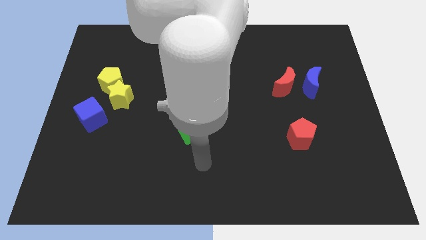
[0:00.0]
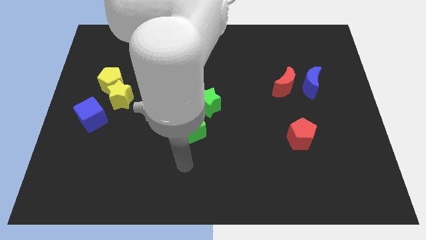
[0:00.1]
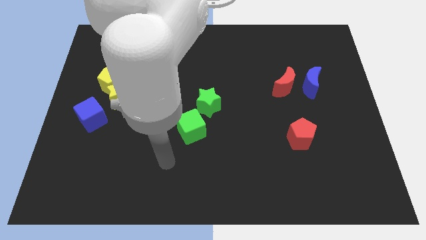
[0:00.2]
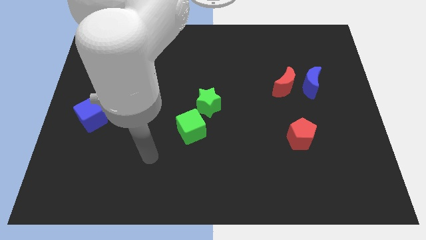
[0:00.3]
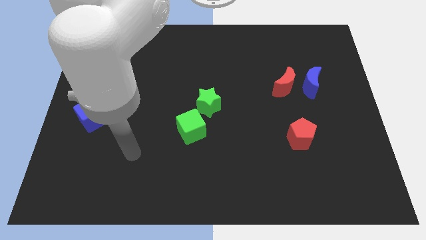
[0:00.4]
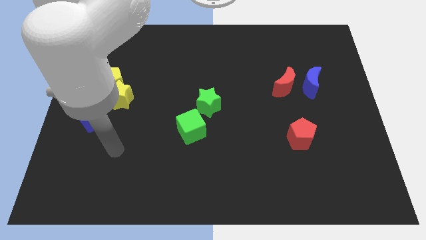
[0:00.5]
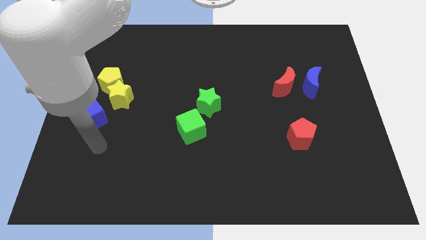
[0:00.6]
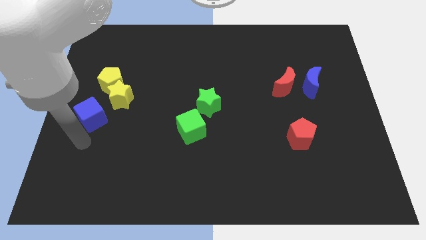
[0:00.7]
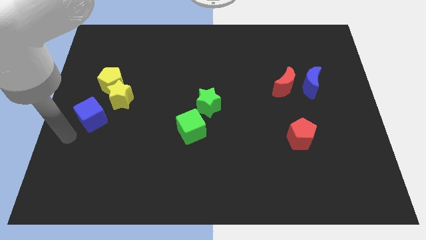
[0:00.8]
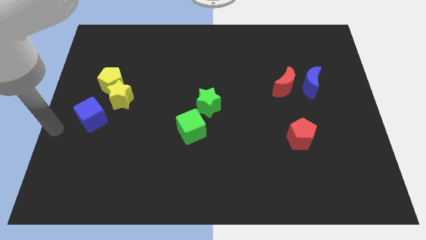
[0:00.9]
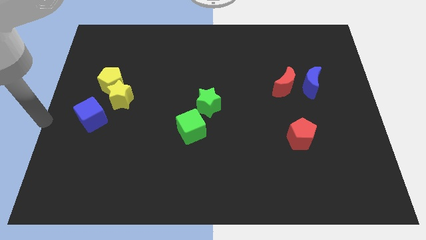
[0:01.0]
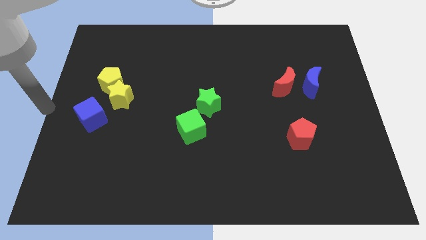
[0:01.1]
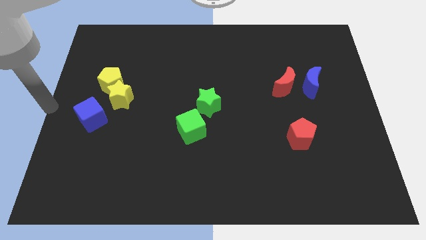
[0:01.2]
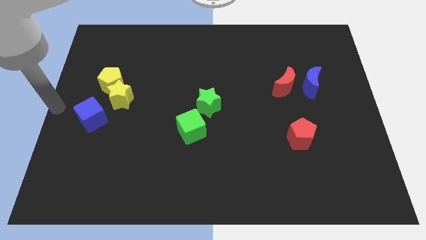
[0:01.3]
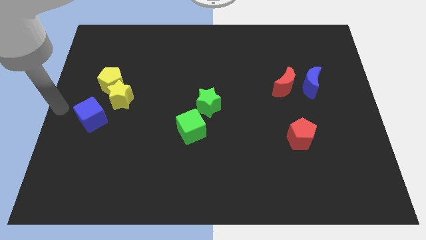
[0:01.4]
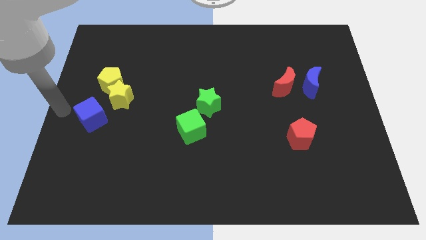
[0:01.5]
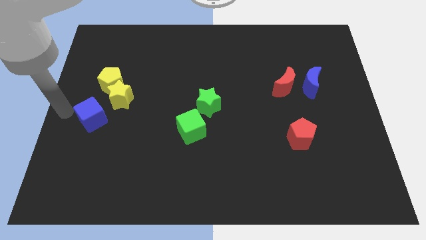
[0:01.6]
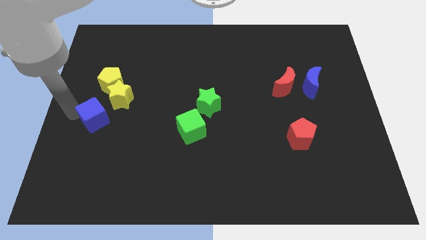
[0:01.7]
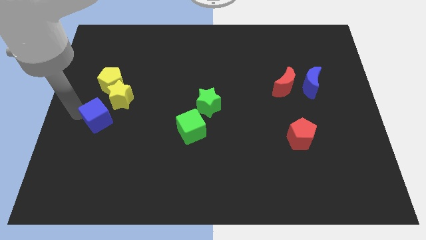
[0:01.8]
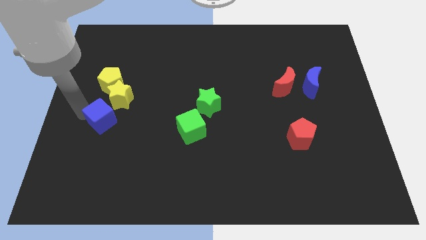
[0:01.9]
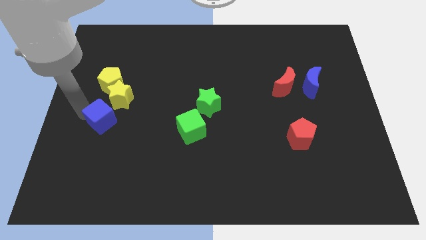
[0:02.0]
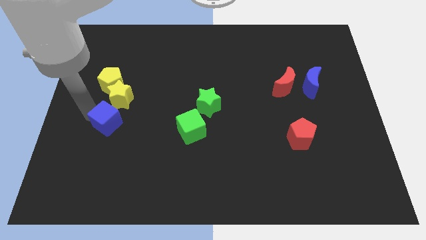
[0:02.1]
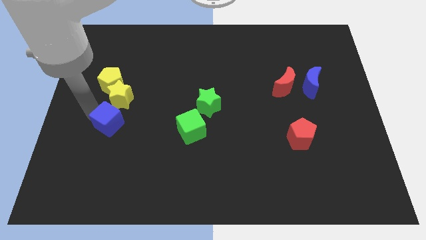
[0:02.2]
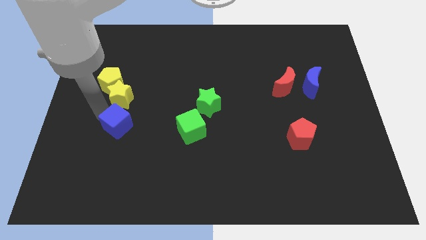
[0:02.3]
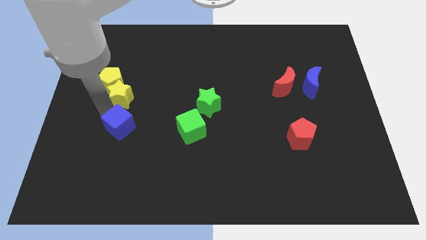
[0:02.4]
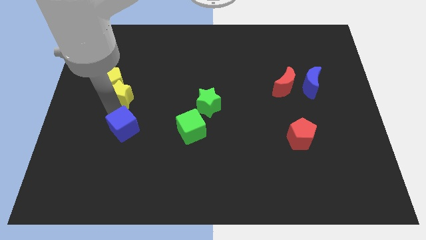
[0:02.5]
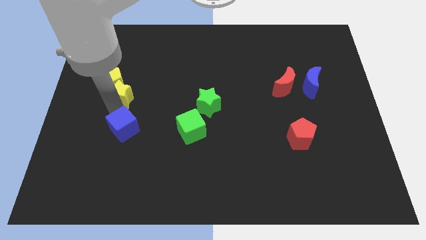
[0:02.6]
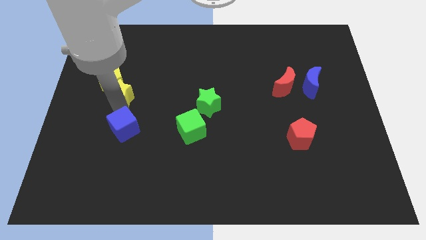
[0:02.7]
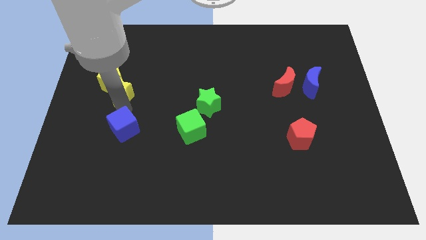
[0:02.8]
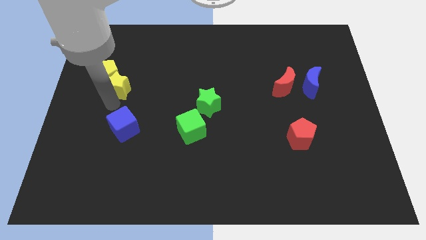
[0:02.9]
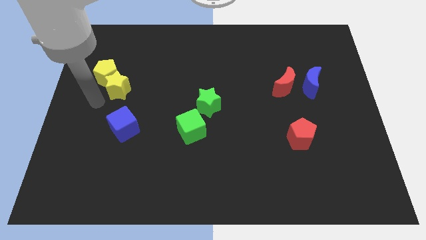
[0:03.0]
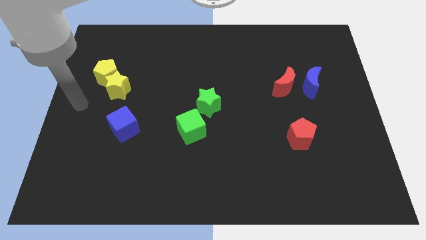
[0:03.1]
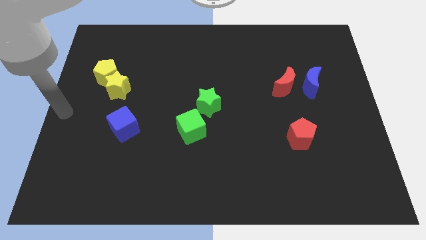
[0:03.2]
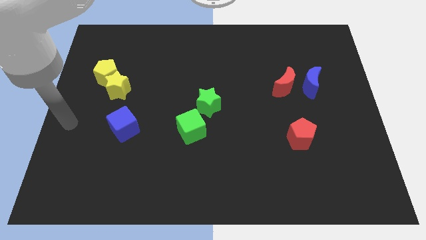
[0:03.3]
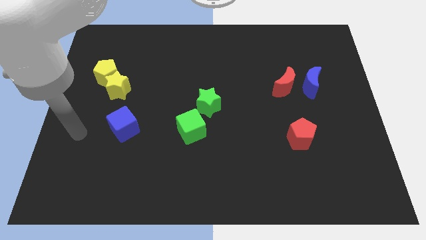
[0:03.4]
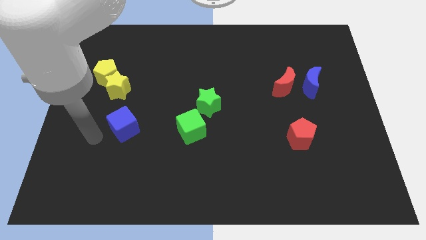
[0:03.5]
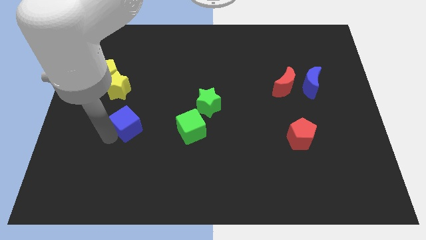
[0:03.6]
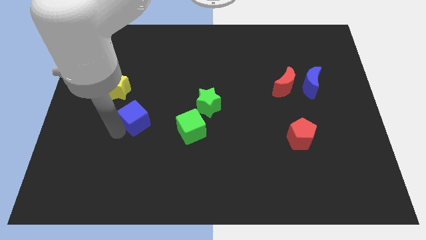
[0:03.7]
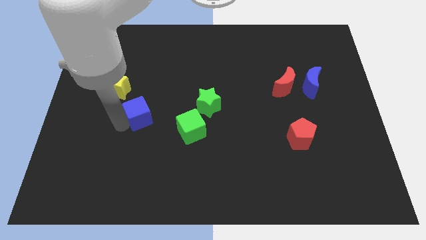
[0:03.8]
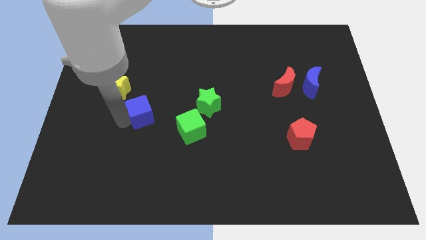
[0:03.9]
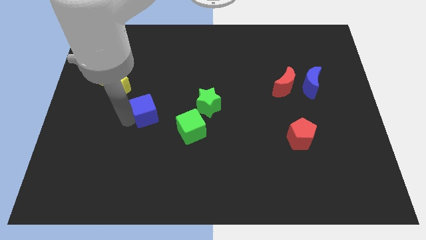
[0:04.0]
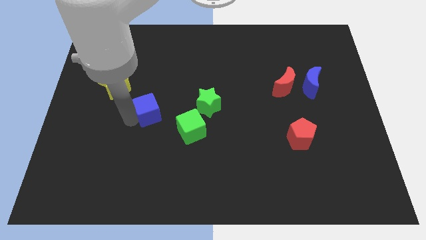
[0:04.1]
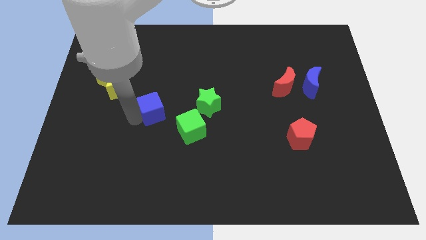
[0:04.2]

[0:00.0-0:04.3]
push the blue cube towards green star

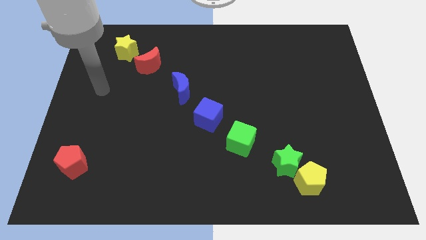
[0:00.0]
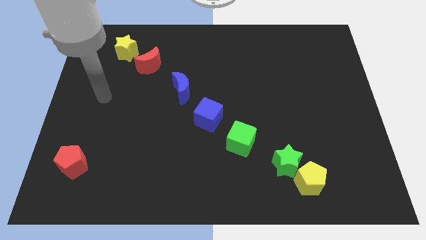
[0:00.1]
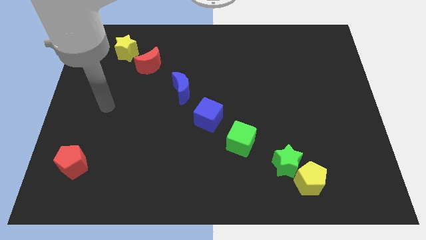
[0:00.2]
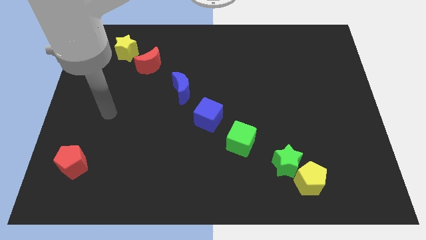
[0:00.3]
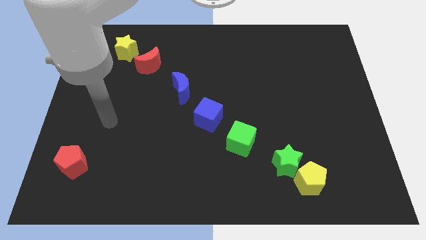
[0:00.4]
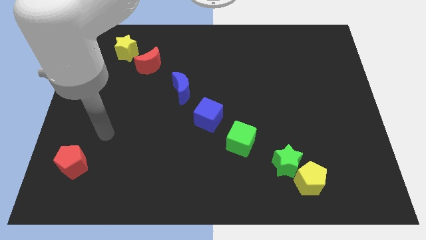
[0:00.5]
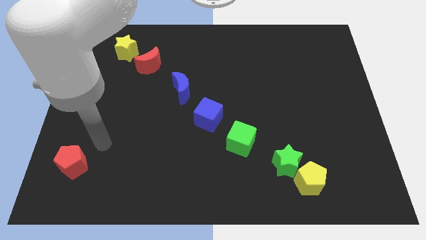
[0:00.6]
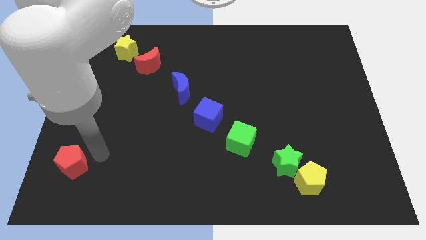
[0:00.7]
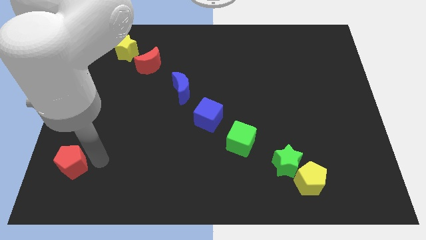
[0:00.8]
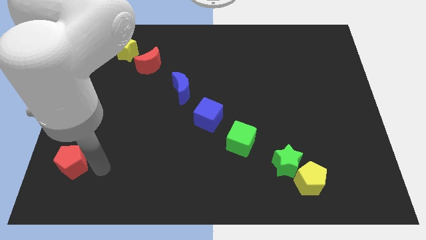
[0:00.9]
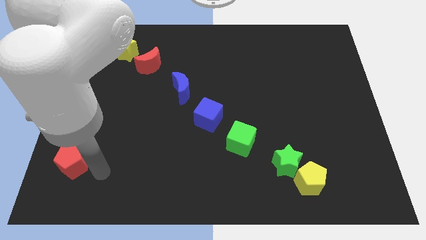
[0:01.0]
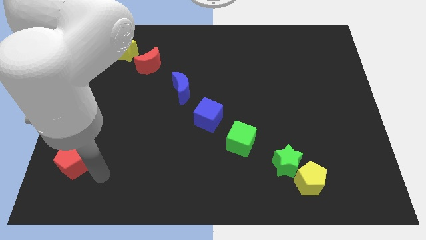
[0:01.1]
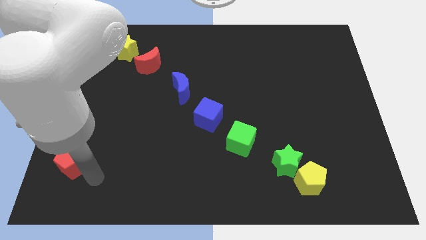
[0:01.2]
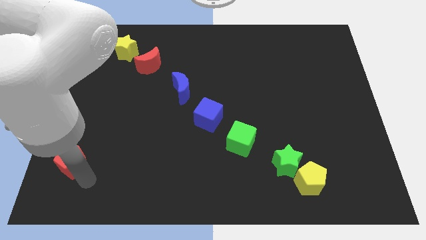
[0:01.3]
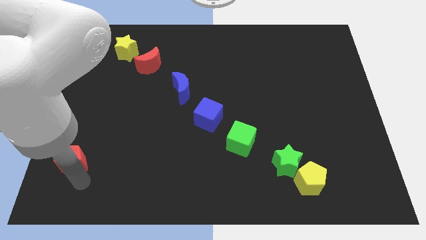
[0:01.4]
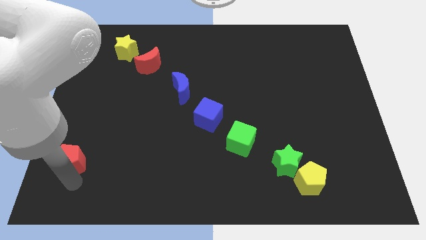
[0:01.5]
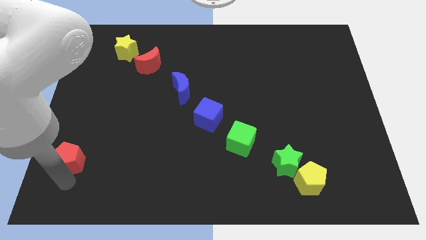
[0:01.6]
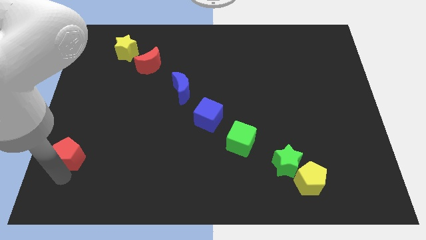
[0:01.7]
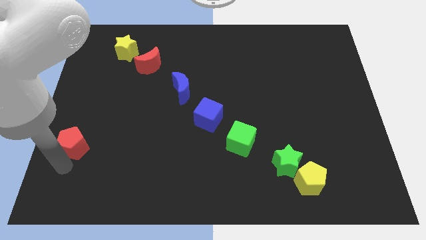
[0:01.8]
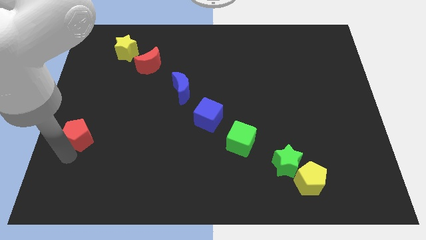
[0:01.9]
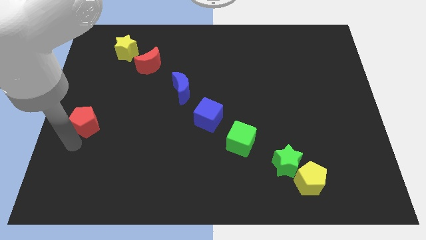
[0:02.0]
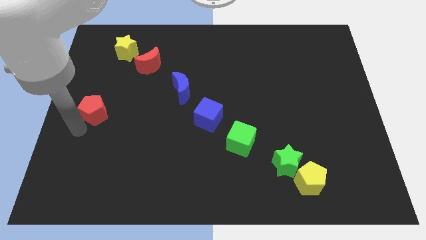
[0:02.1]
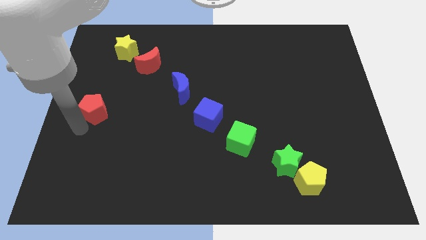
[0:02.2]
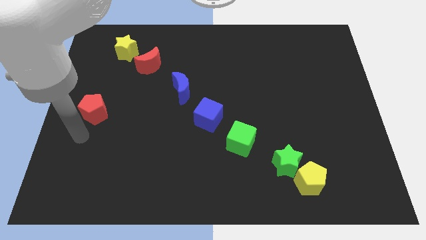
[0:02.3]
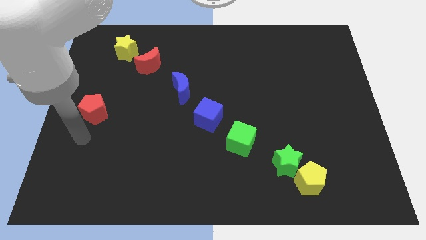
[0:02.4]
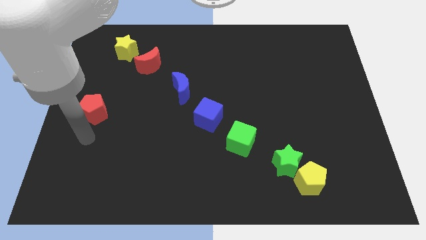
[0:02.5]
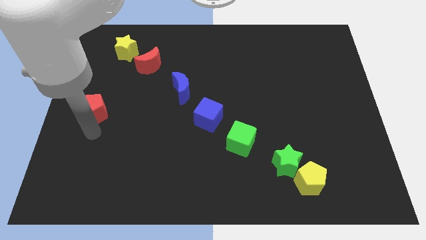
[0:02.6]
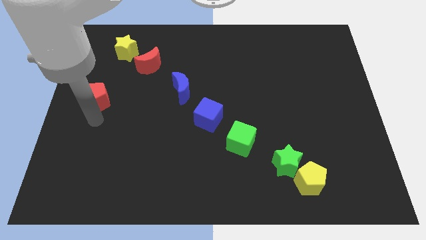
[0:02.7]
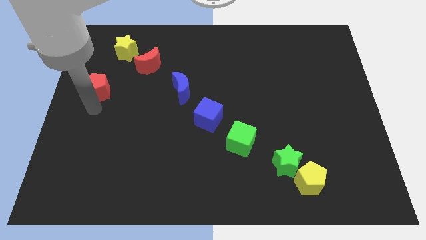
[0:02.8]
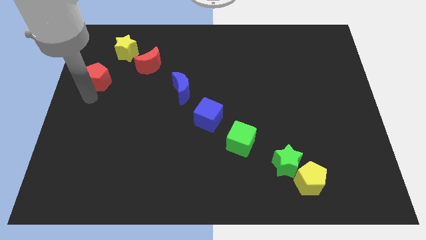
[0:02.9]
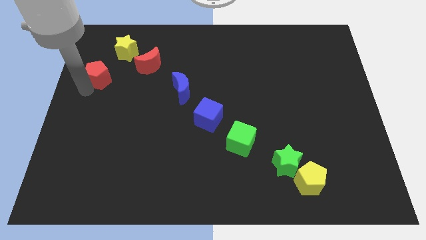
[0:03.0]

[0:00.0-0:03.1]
drag the red pentagon towards the top

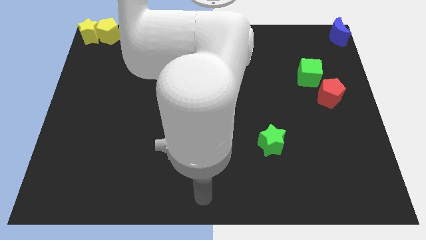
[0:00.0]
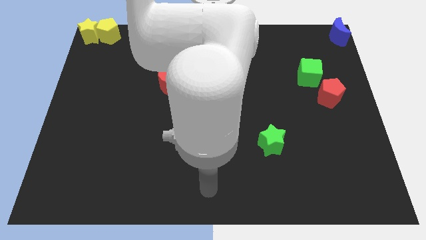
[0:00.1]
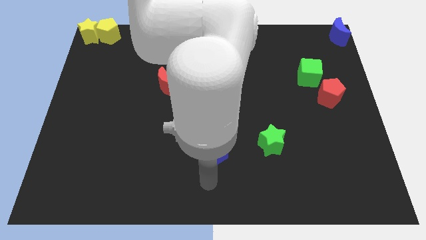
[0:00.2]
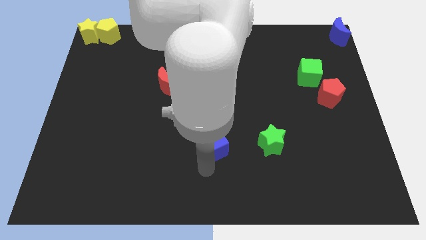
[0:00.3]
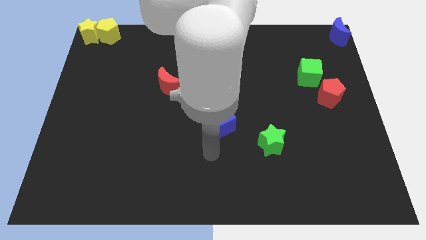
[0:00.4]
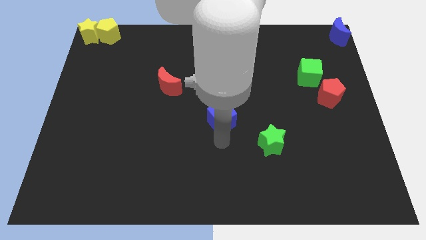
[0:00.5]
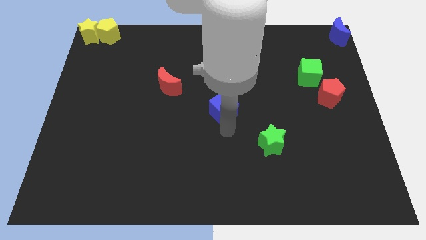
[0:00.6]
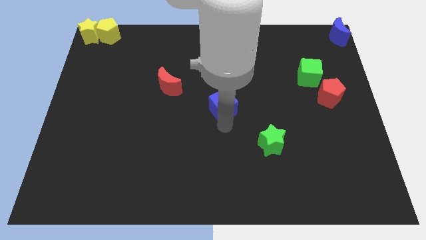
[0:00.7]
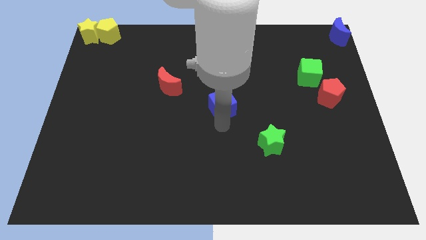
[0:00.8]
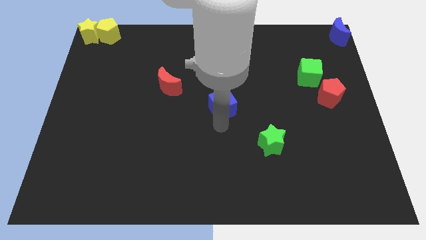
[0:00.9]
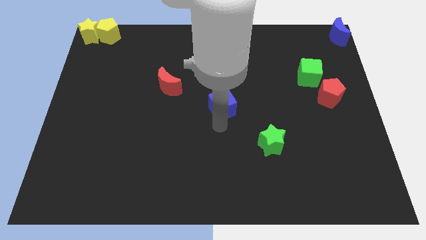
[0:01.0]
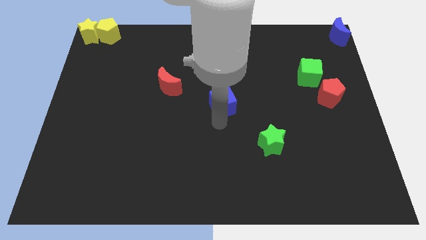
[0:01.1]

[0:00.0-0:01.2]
move the blue cube to the center of the board

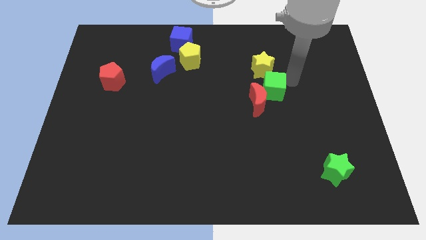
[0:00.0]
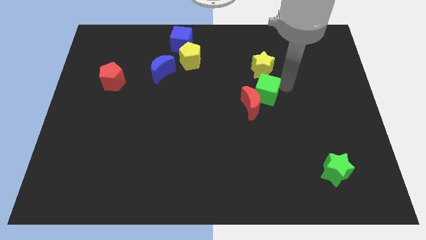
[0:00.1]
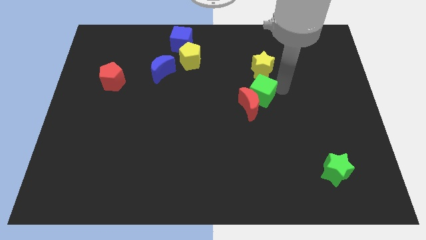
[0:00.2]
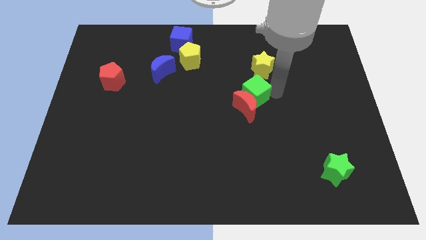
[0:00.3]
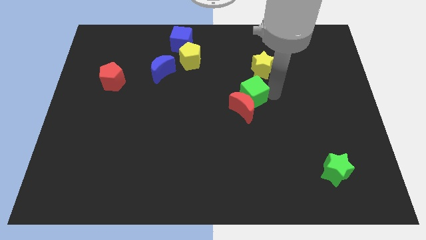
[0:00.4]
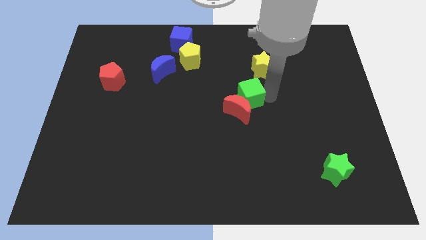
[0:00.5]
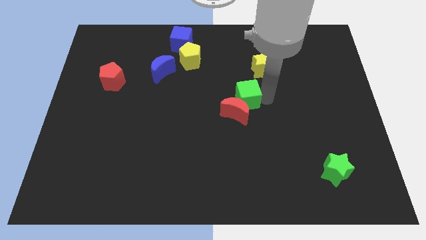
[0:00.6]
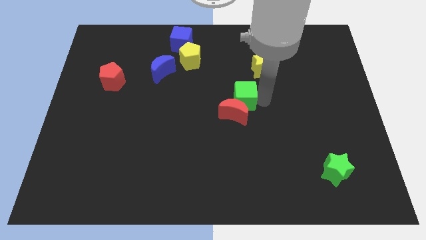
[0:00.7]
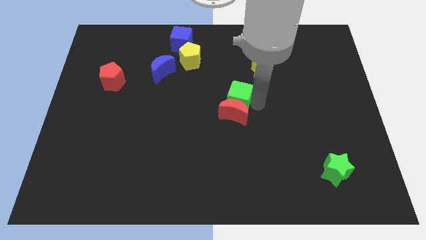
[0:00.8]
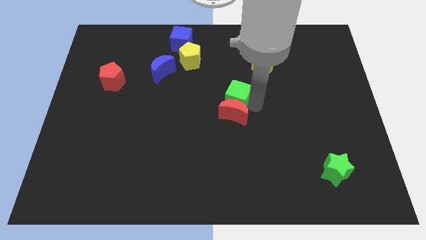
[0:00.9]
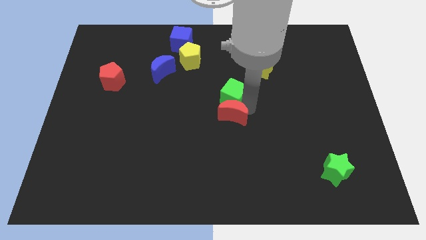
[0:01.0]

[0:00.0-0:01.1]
push red crescent and green cube apart from yellow star
